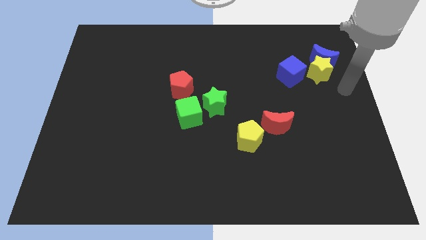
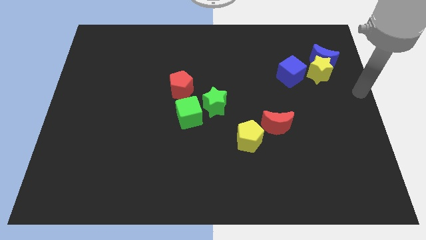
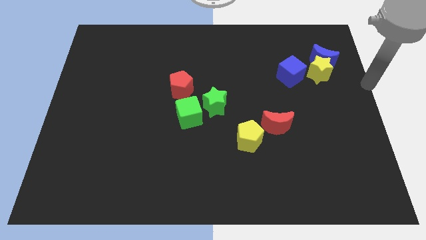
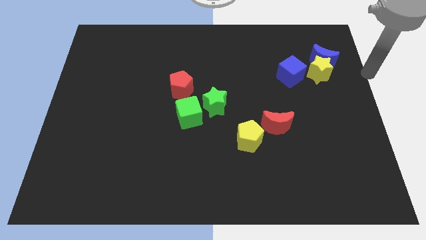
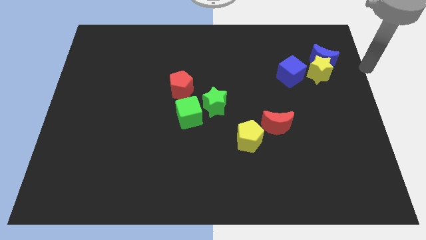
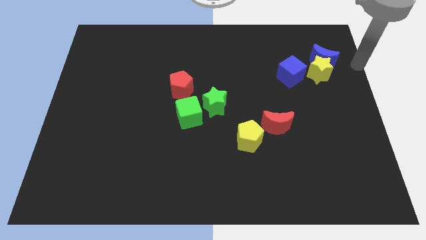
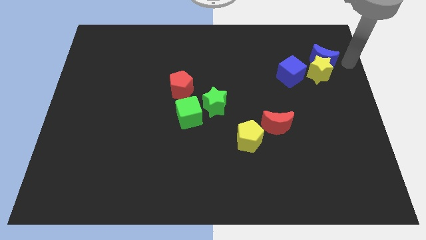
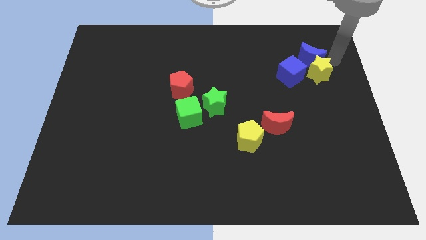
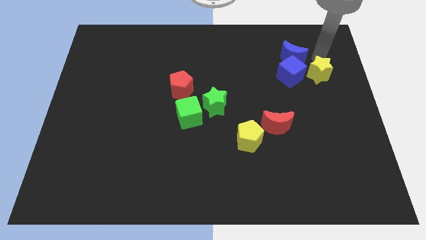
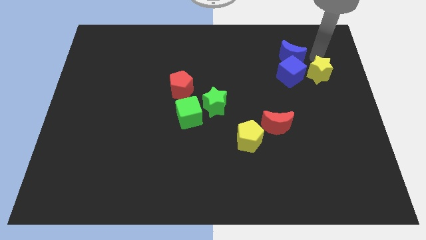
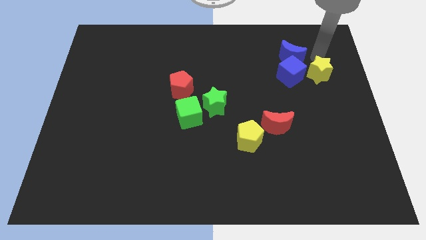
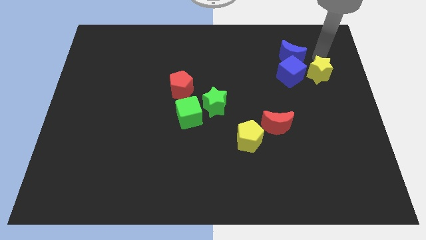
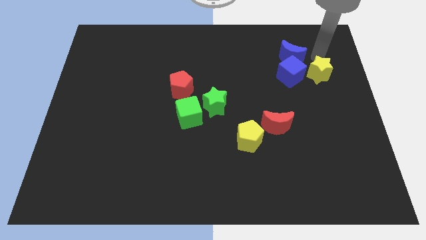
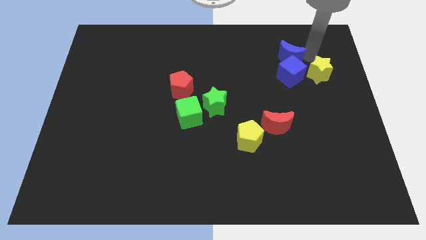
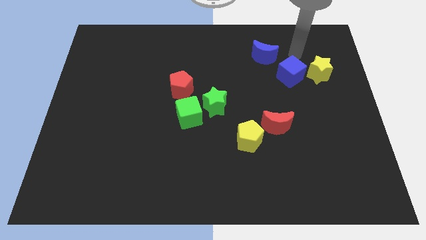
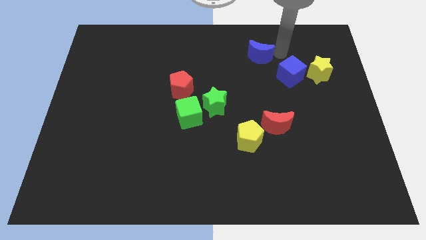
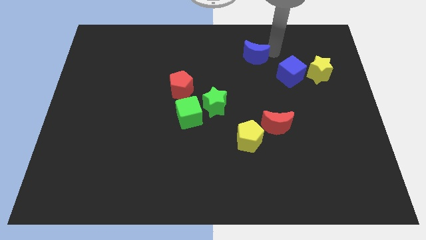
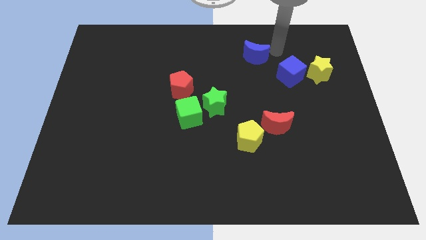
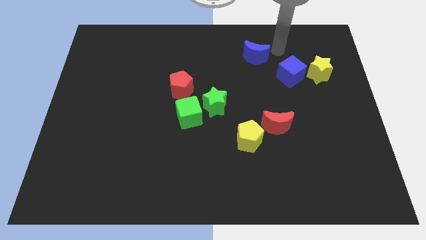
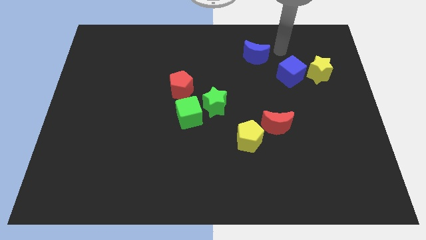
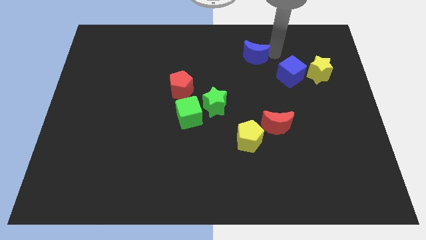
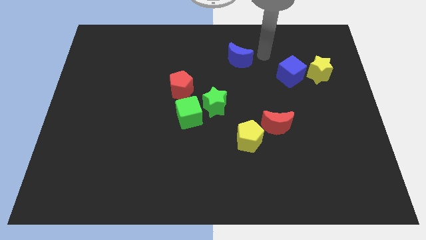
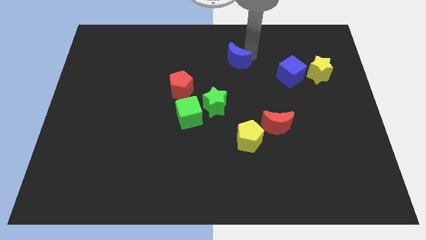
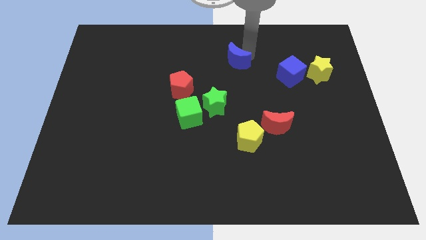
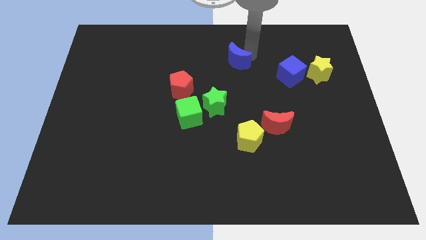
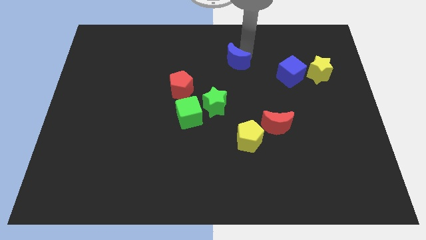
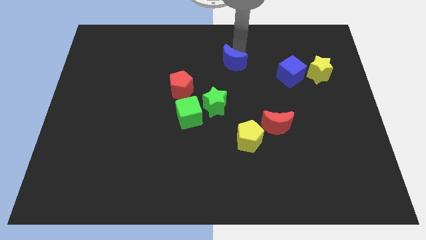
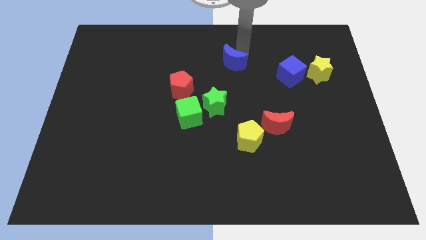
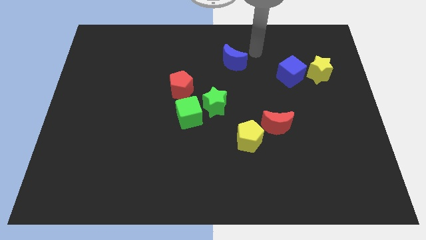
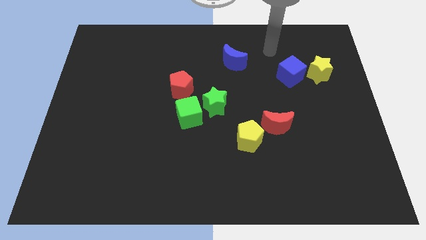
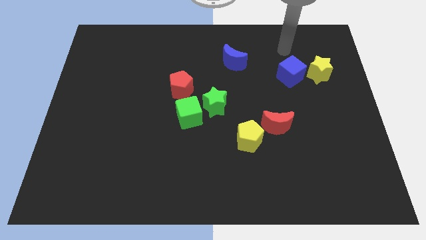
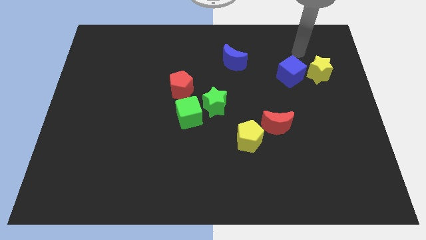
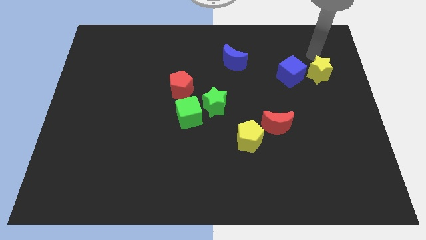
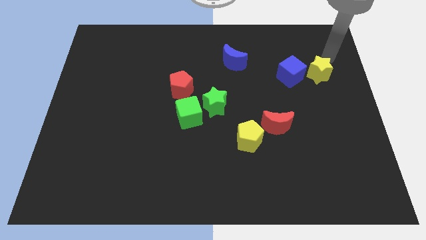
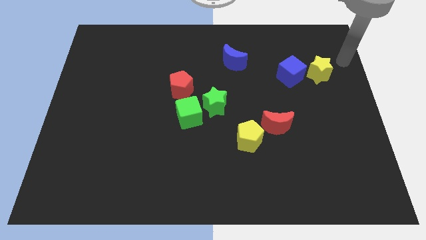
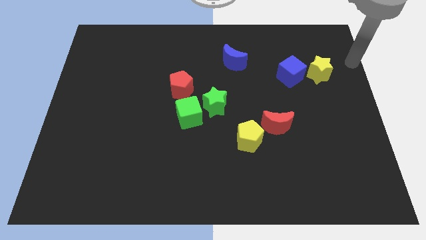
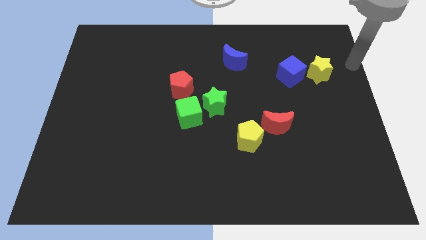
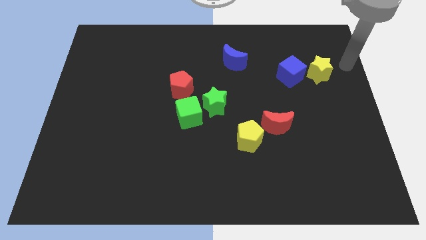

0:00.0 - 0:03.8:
move the blue crescent to the right of the board

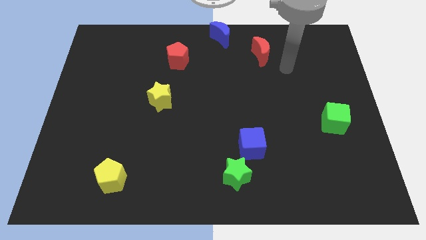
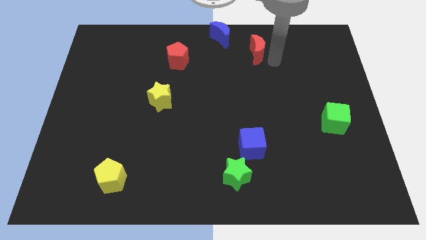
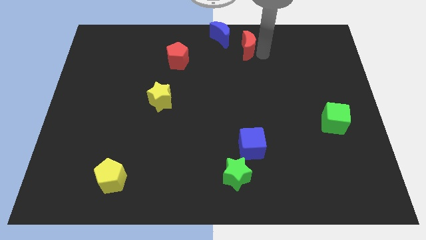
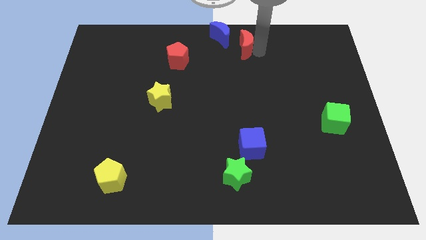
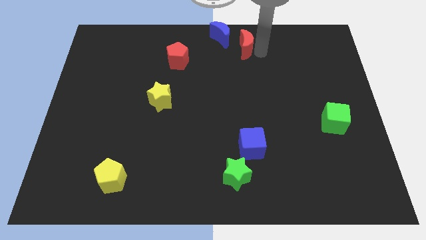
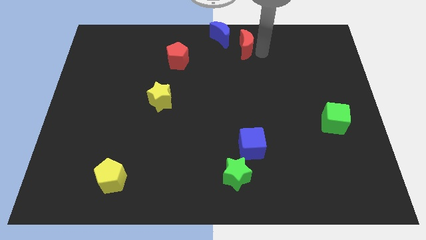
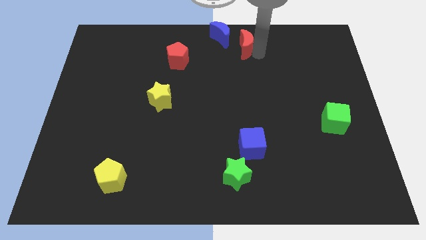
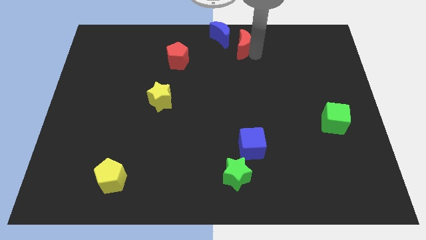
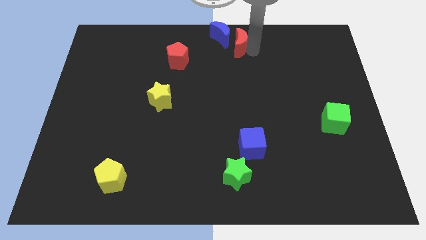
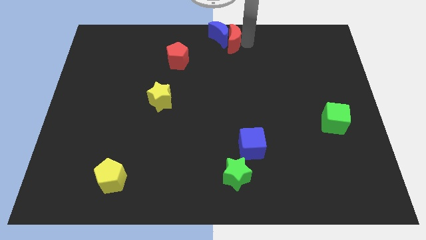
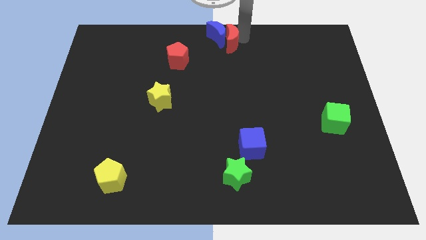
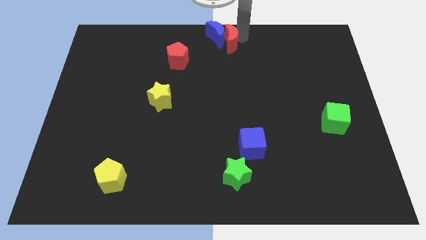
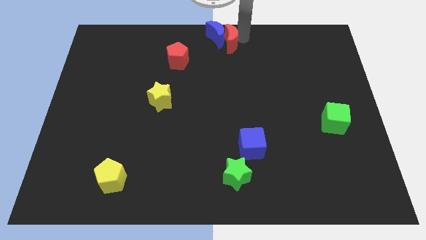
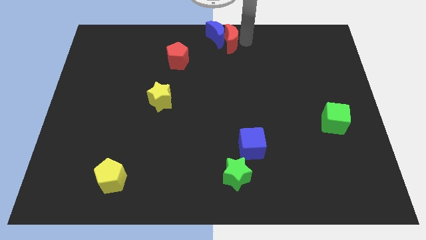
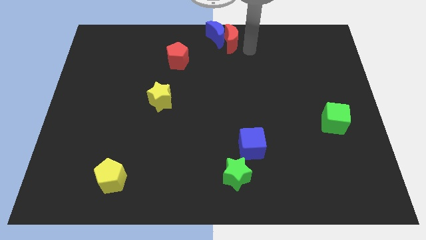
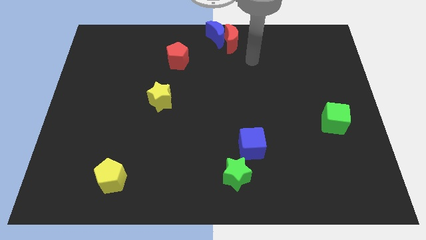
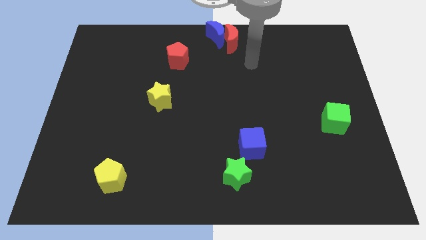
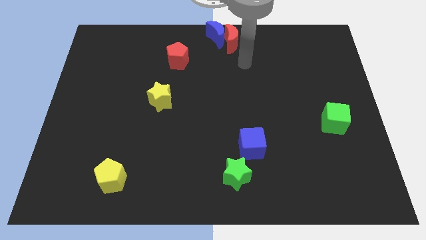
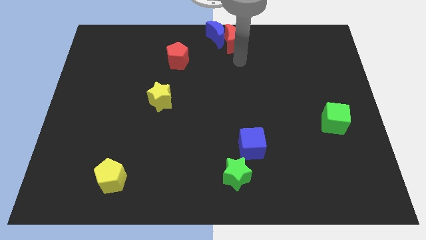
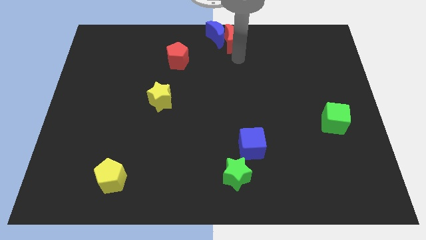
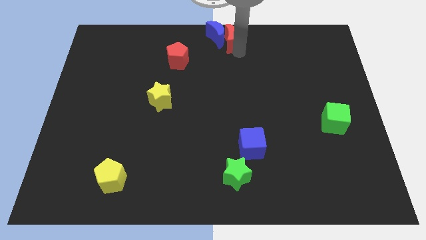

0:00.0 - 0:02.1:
push the red moon into the blue crescent

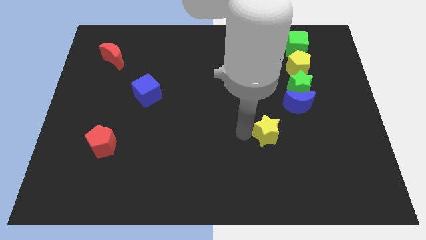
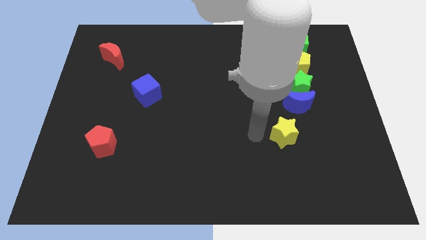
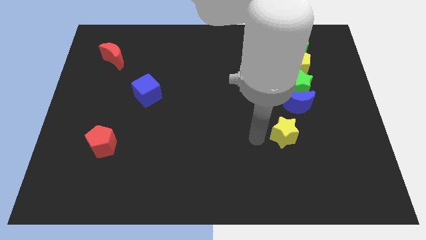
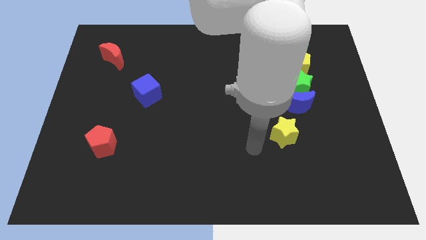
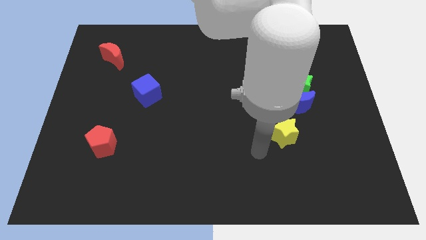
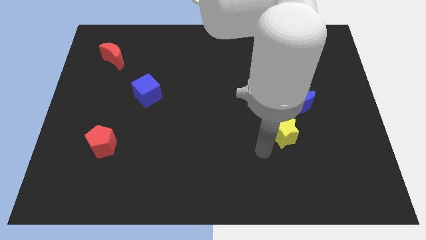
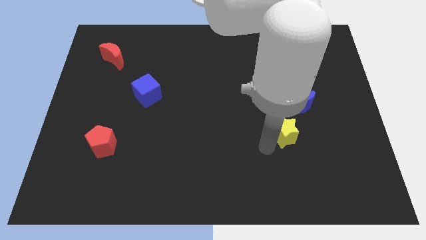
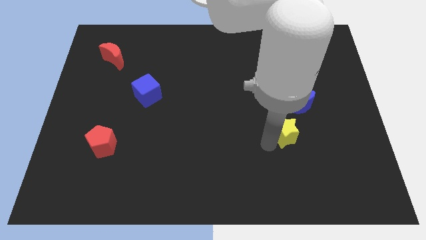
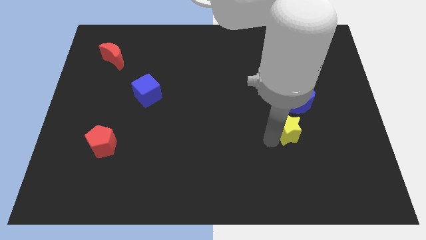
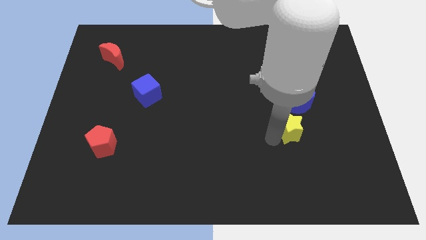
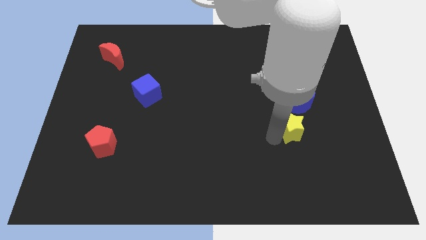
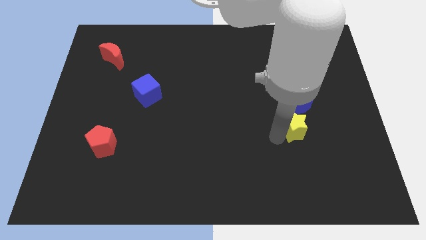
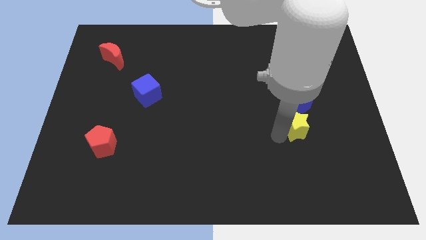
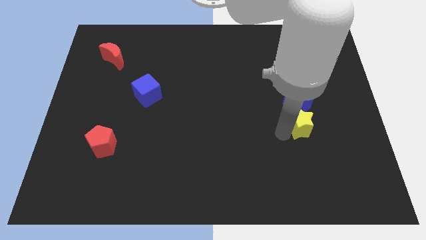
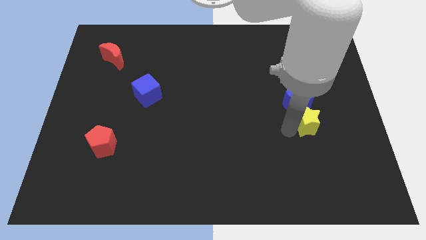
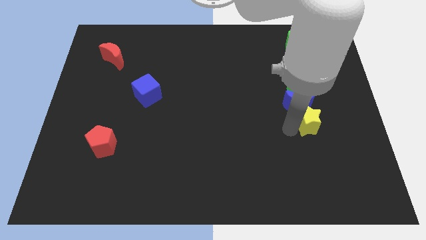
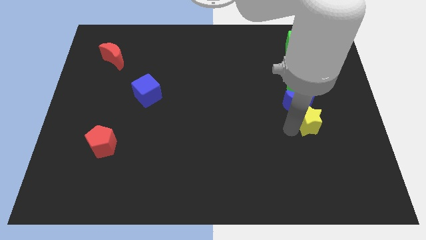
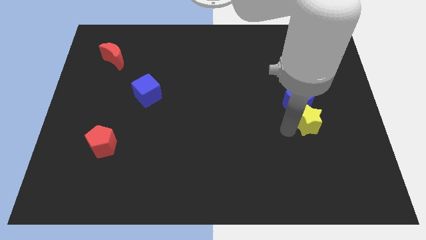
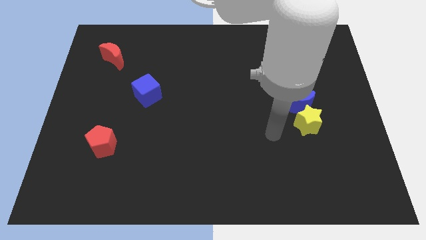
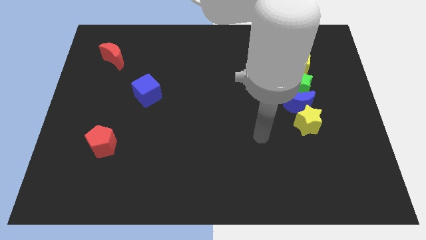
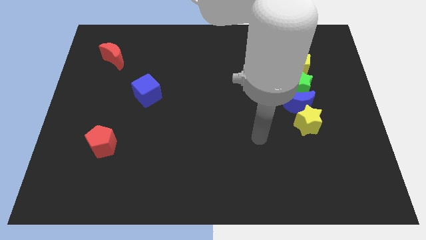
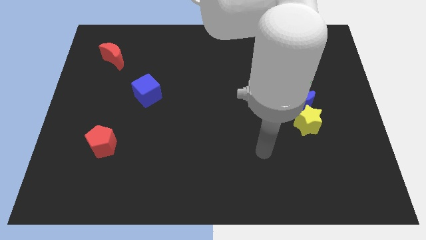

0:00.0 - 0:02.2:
move the yellow star close to the blue moon

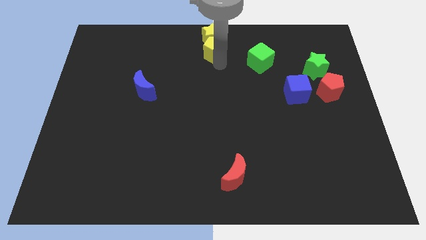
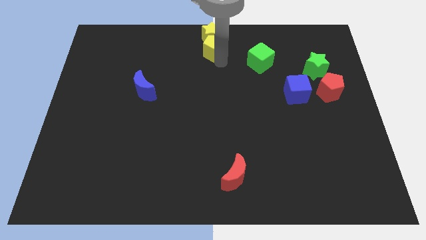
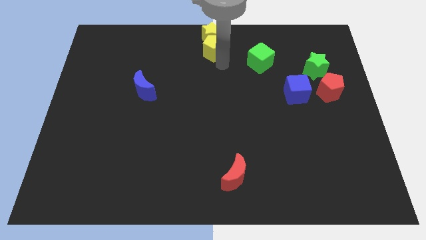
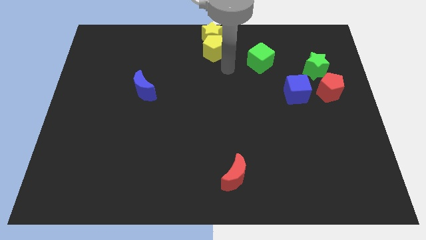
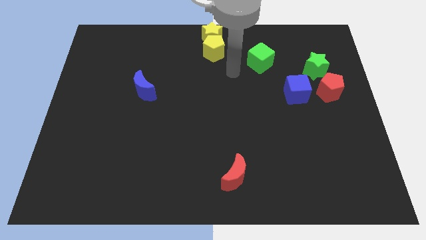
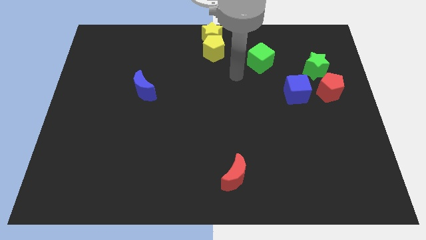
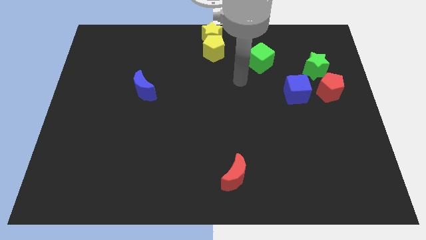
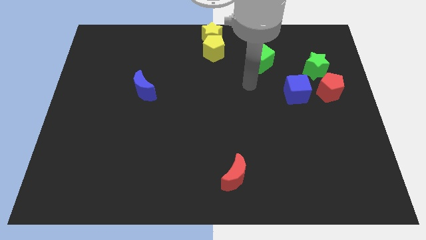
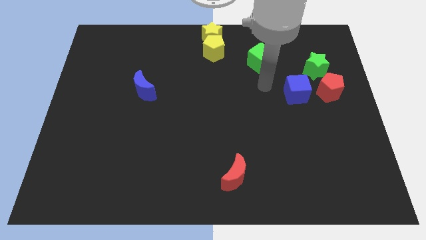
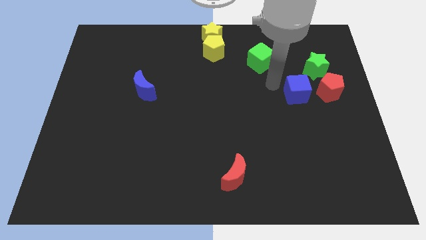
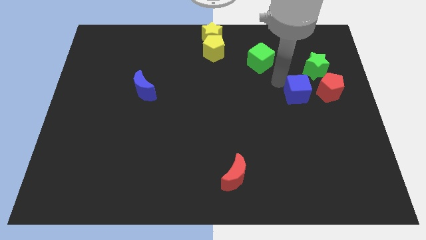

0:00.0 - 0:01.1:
move your arm away from yellow pentagon
